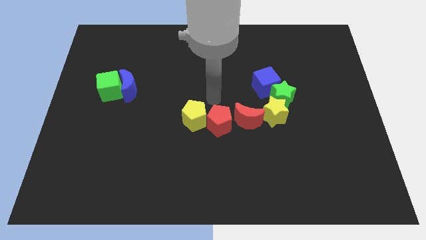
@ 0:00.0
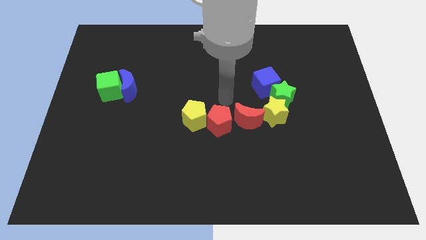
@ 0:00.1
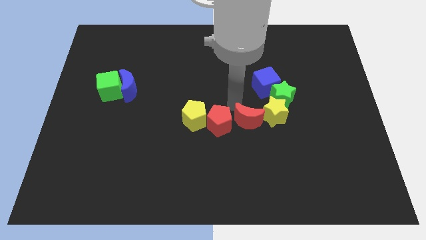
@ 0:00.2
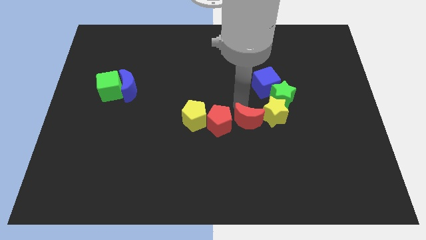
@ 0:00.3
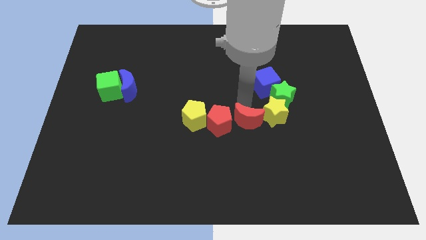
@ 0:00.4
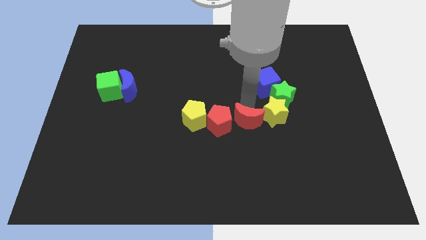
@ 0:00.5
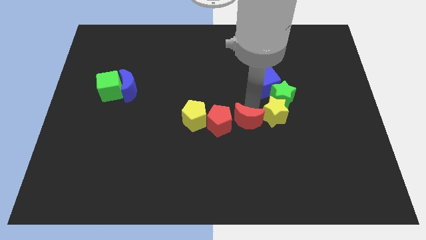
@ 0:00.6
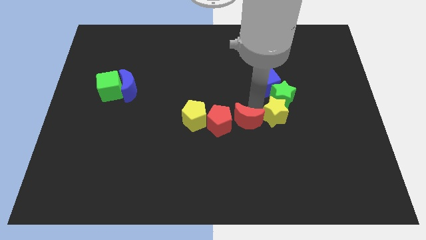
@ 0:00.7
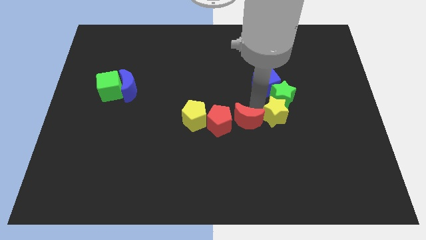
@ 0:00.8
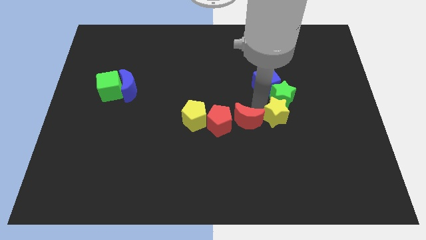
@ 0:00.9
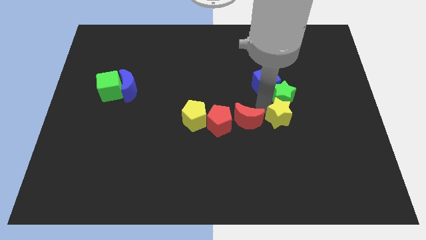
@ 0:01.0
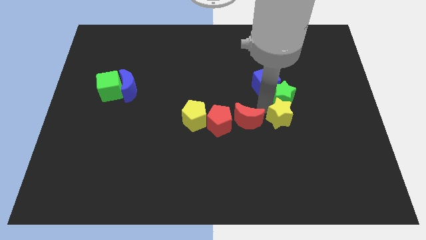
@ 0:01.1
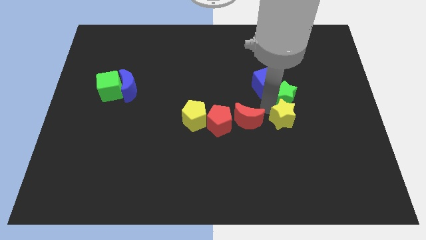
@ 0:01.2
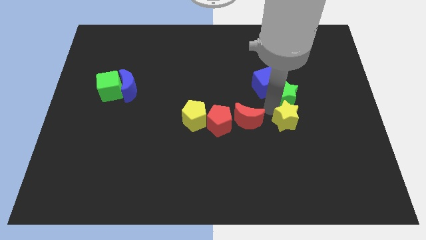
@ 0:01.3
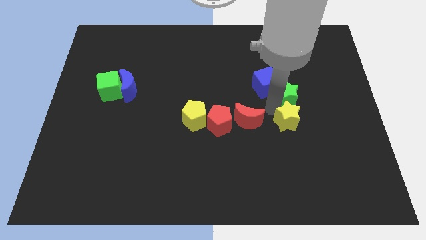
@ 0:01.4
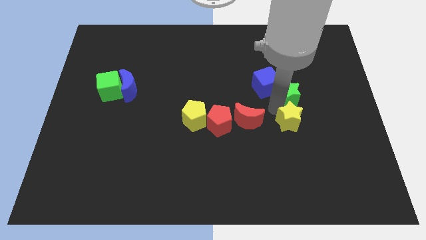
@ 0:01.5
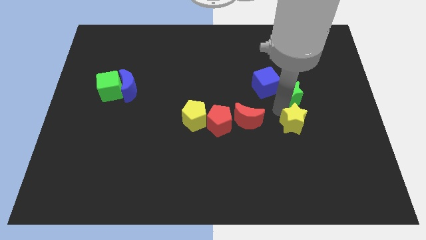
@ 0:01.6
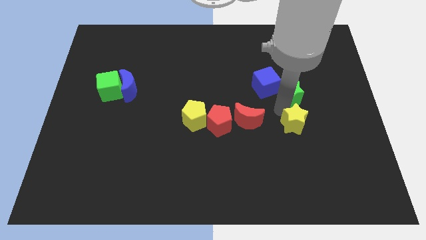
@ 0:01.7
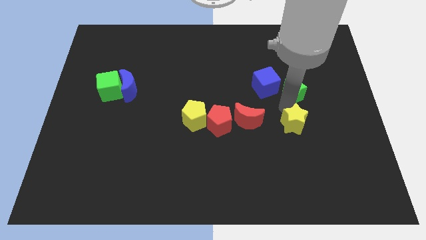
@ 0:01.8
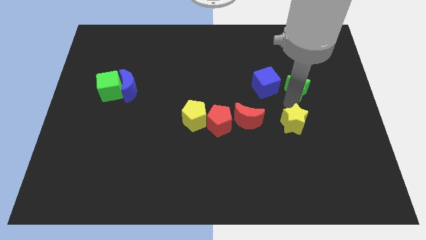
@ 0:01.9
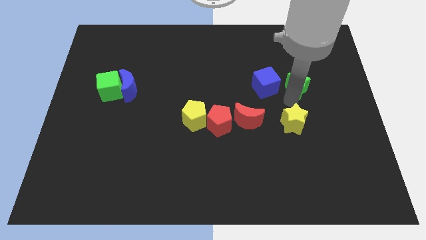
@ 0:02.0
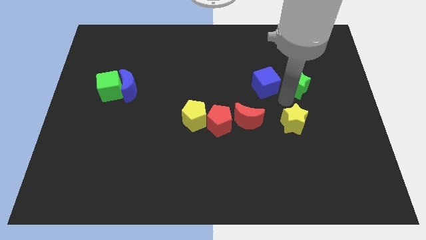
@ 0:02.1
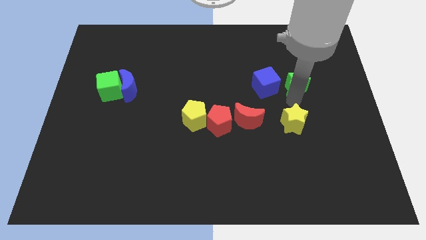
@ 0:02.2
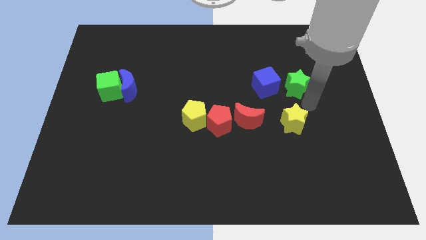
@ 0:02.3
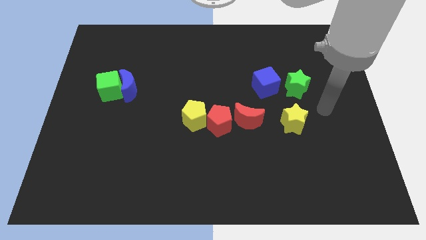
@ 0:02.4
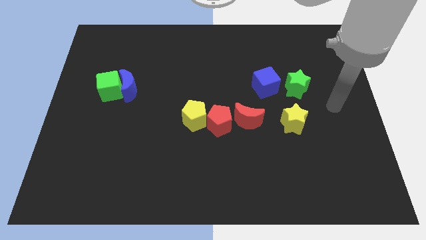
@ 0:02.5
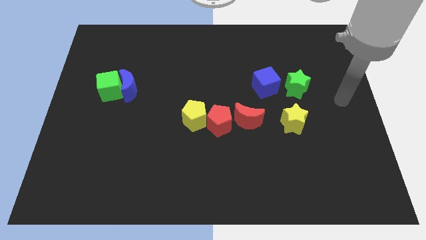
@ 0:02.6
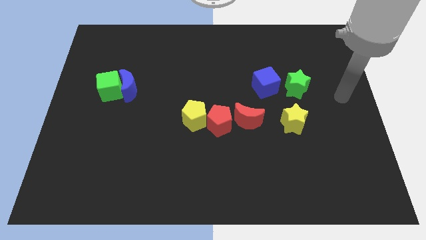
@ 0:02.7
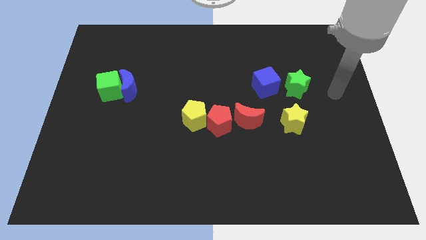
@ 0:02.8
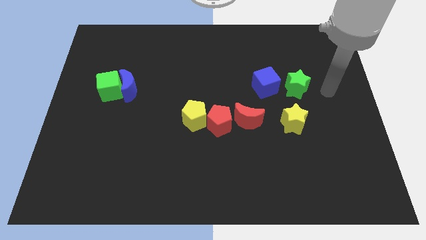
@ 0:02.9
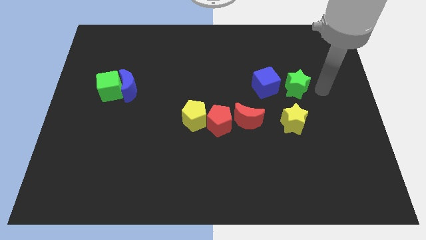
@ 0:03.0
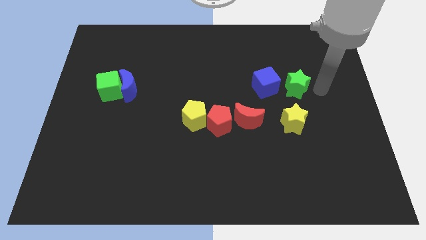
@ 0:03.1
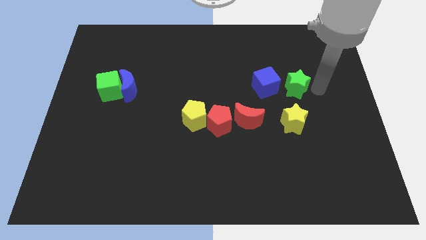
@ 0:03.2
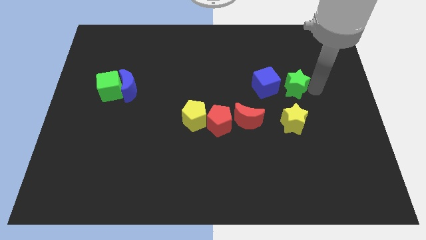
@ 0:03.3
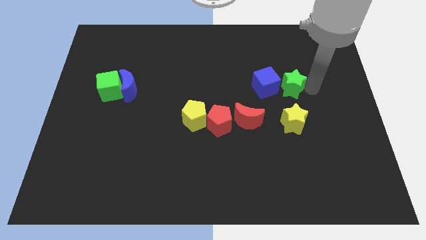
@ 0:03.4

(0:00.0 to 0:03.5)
separate the yellow star and green star from the other blocks

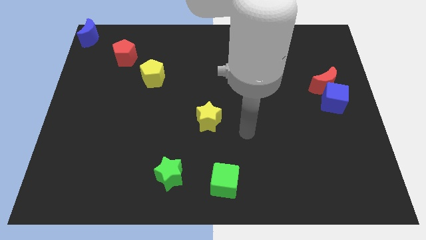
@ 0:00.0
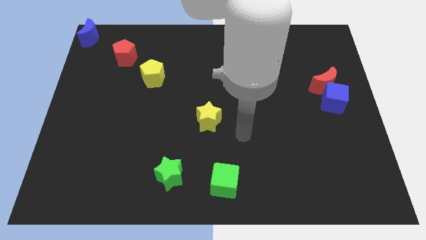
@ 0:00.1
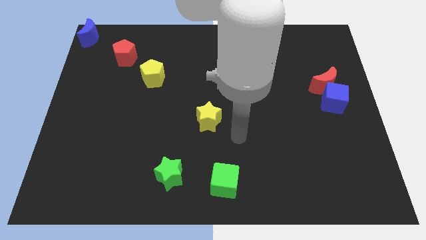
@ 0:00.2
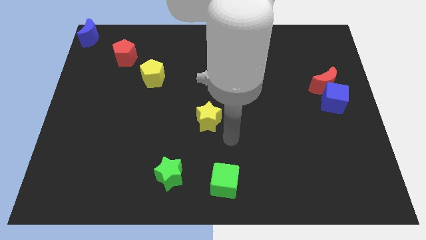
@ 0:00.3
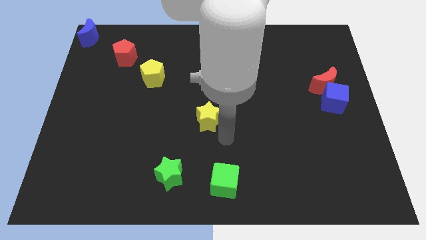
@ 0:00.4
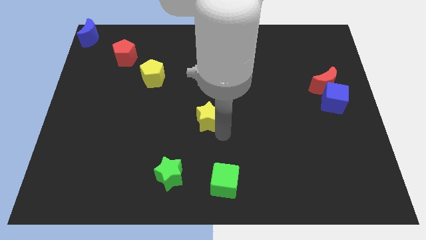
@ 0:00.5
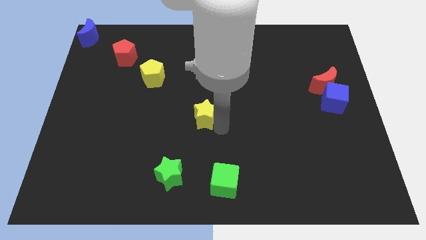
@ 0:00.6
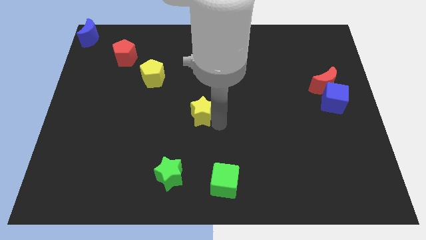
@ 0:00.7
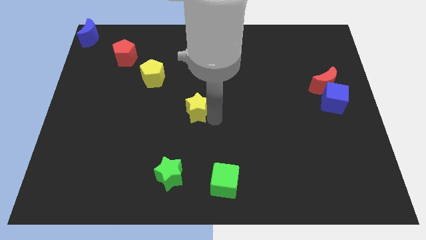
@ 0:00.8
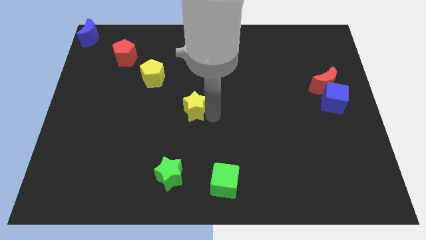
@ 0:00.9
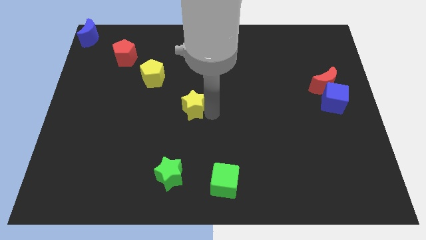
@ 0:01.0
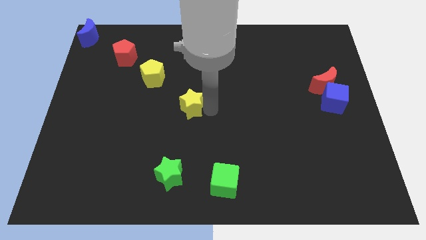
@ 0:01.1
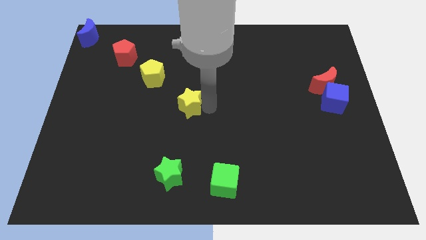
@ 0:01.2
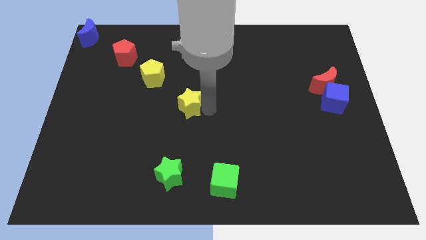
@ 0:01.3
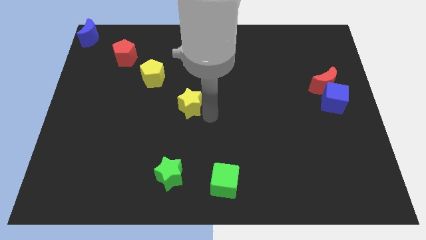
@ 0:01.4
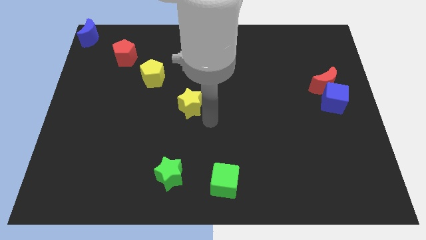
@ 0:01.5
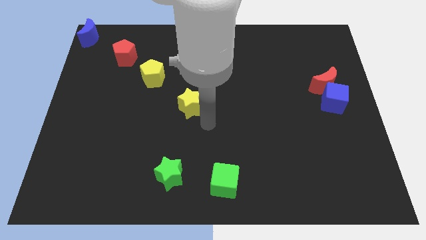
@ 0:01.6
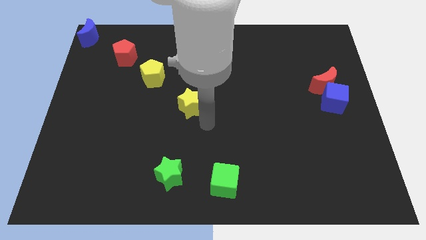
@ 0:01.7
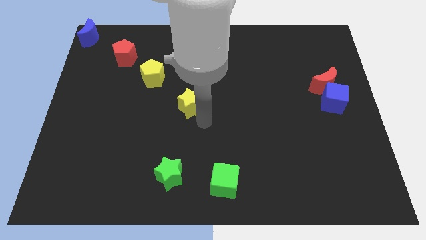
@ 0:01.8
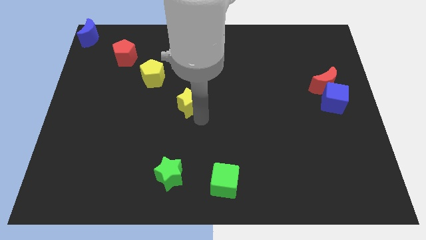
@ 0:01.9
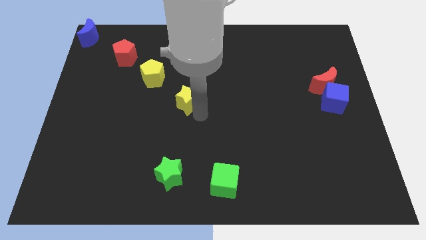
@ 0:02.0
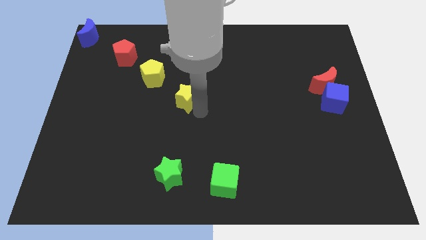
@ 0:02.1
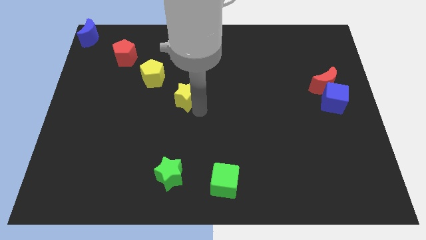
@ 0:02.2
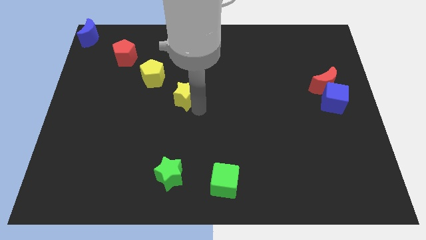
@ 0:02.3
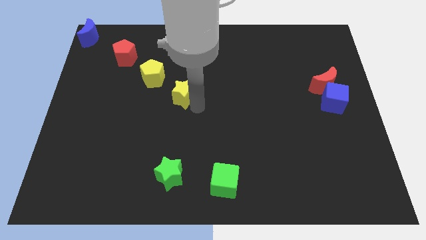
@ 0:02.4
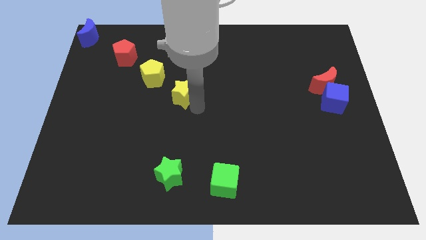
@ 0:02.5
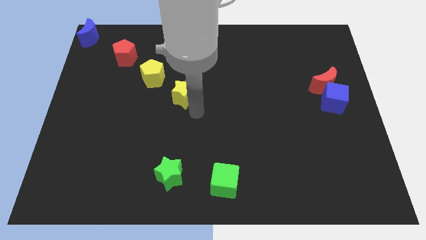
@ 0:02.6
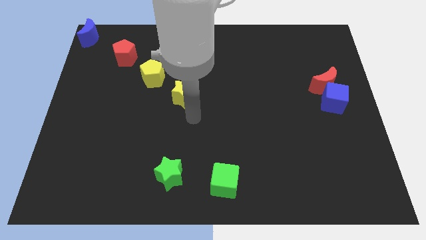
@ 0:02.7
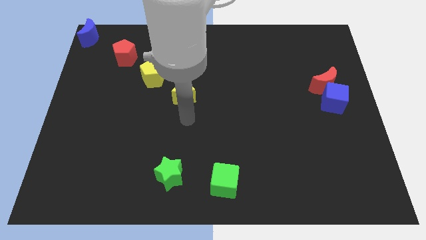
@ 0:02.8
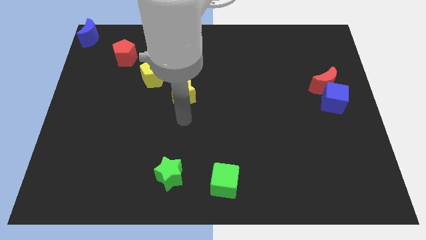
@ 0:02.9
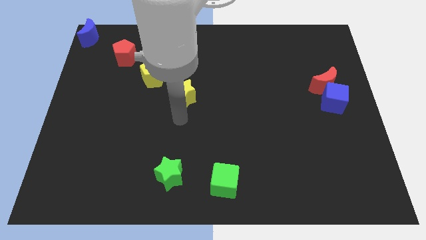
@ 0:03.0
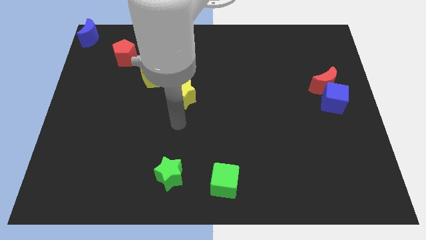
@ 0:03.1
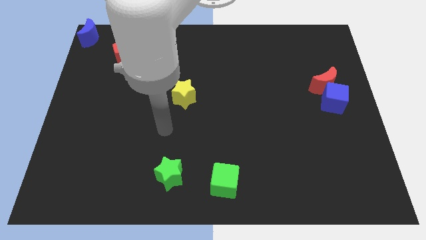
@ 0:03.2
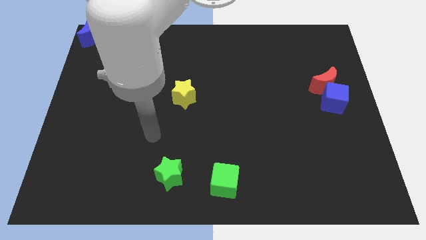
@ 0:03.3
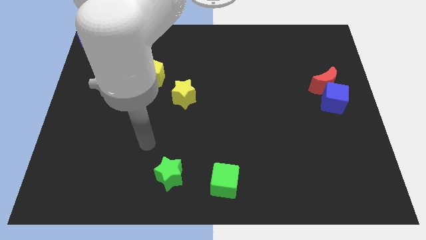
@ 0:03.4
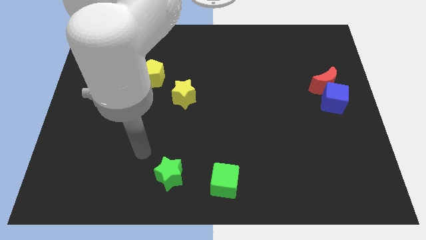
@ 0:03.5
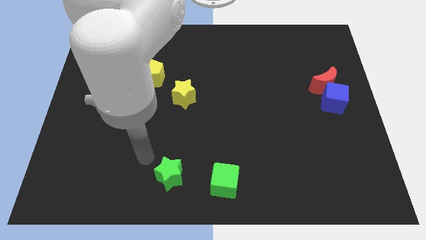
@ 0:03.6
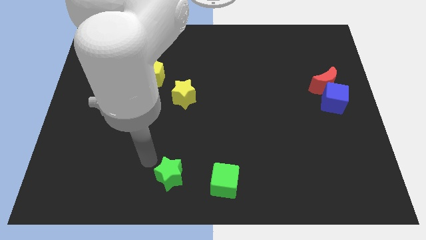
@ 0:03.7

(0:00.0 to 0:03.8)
push yellow star towards yellow pentagon

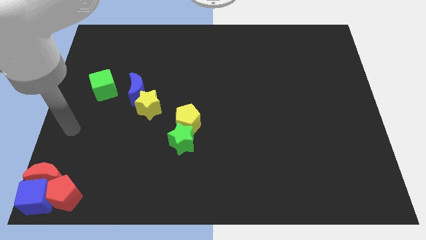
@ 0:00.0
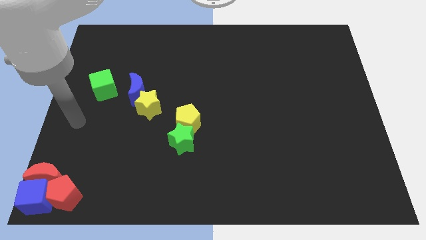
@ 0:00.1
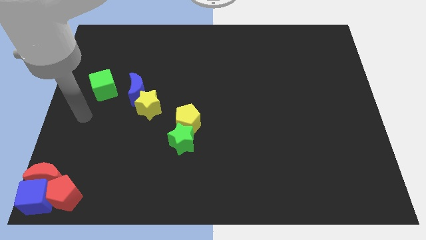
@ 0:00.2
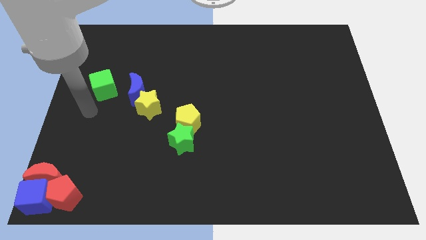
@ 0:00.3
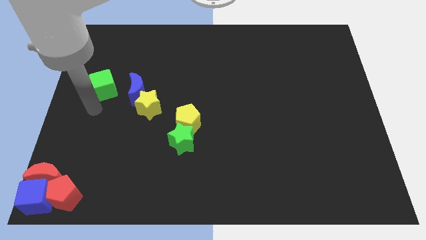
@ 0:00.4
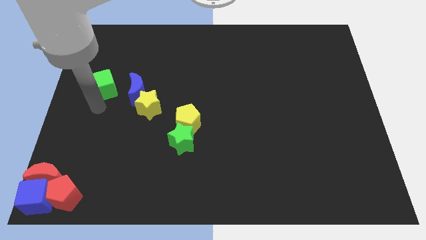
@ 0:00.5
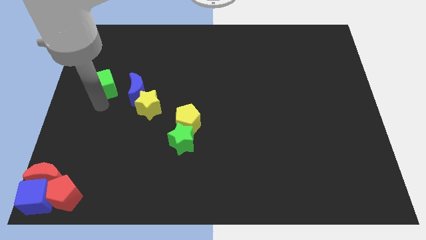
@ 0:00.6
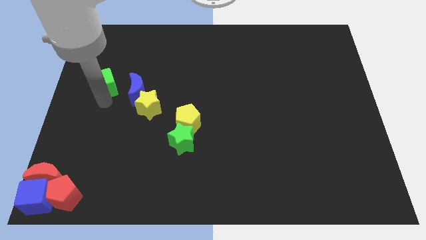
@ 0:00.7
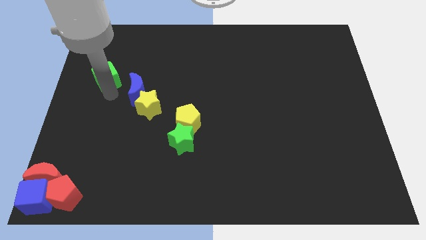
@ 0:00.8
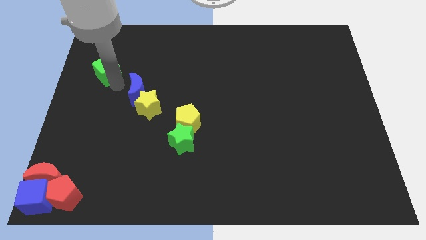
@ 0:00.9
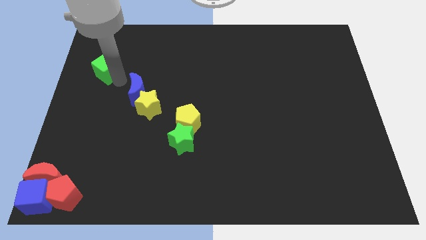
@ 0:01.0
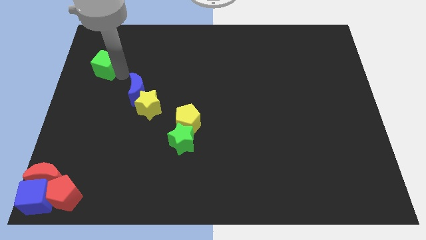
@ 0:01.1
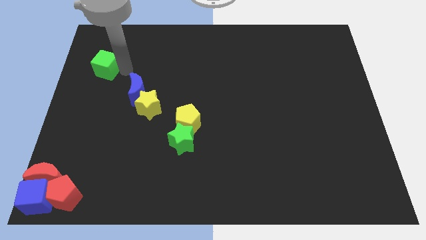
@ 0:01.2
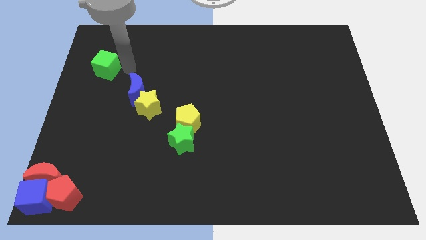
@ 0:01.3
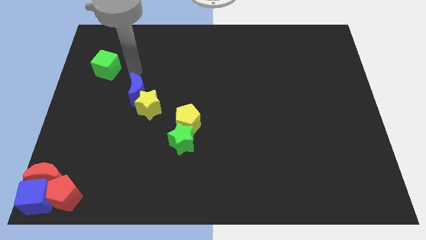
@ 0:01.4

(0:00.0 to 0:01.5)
slightly push the green cube towards top left of the board
